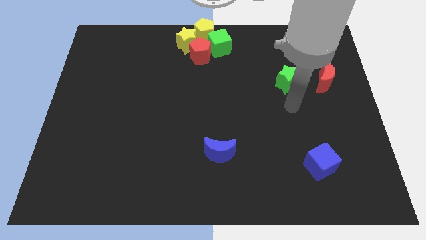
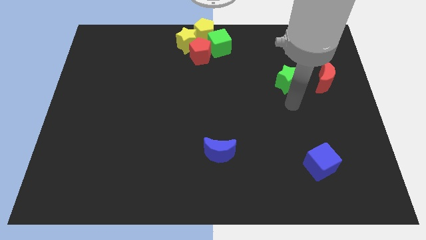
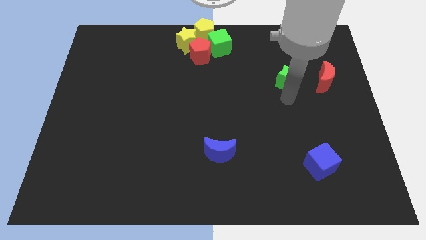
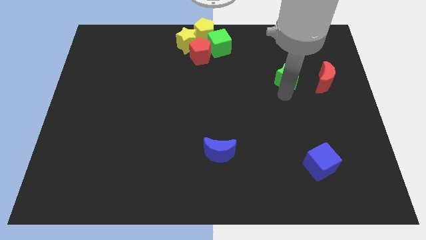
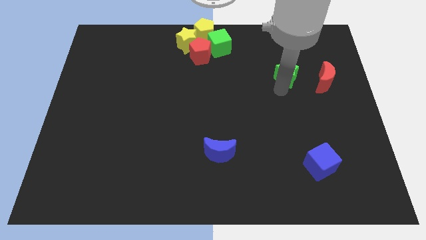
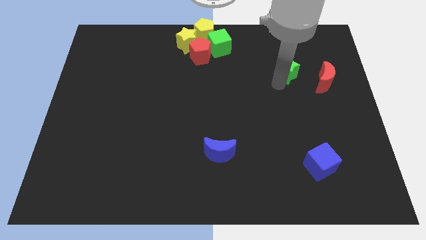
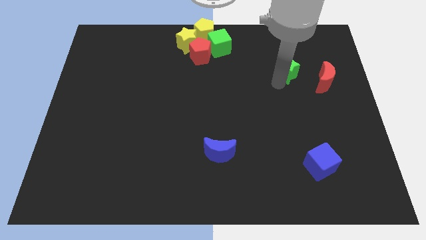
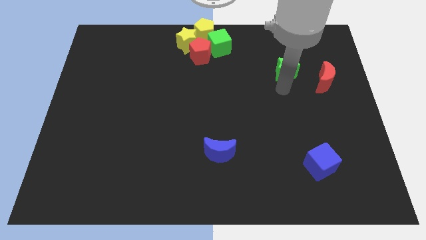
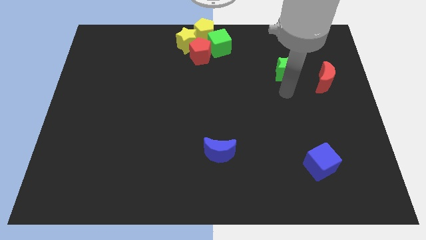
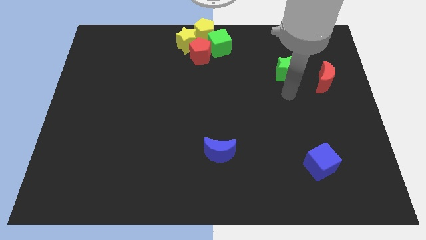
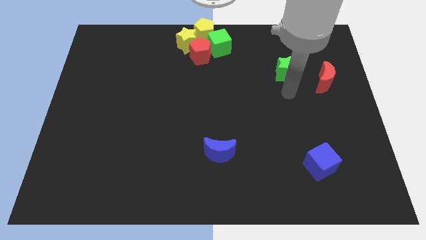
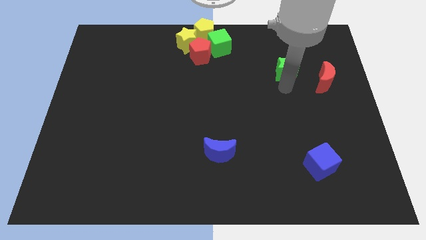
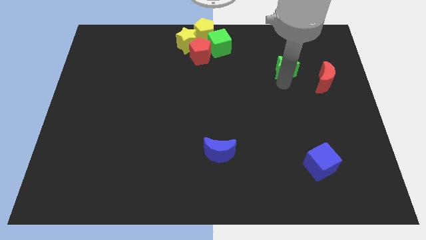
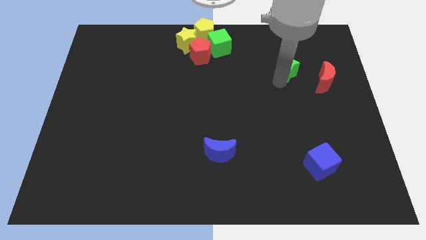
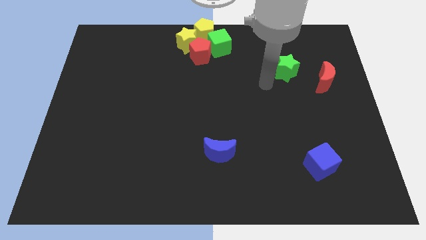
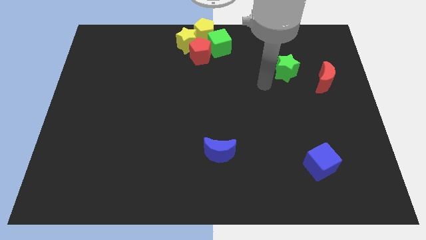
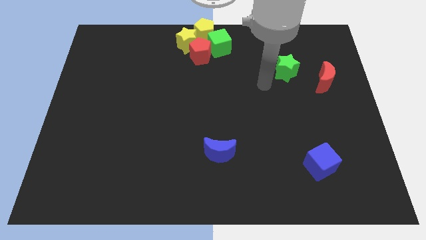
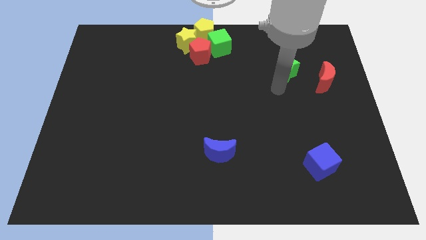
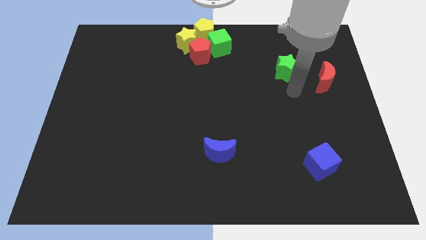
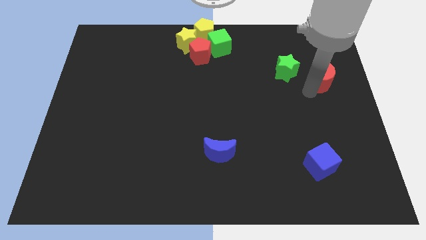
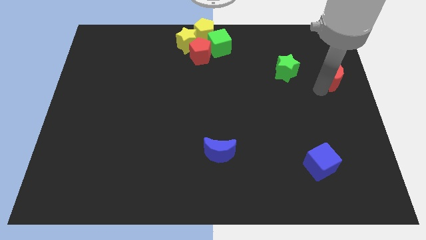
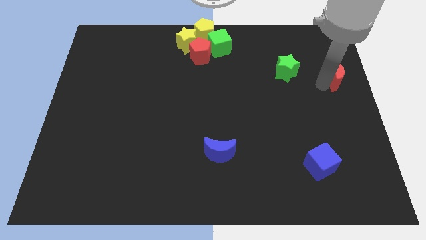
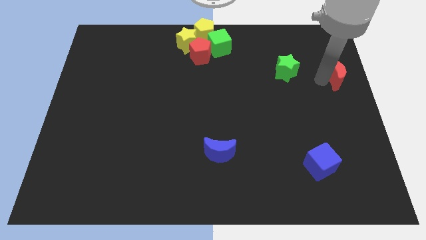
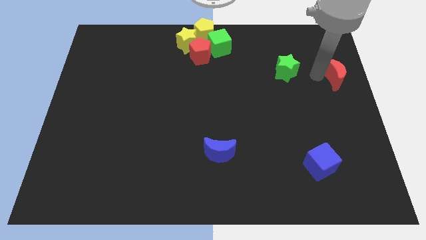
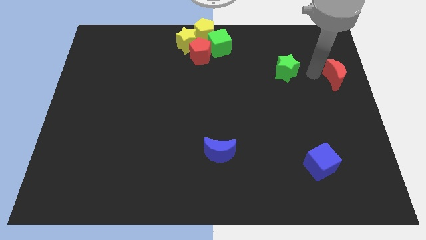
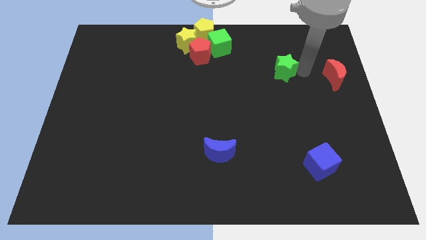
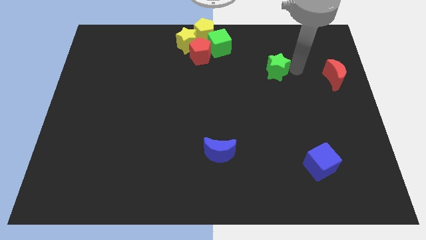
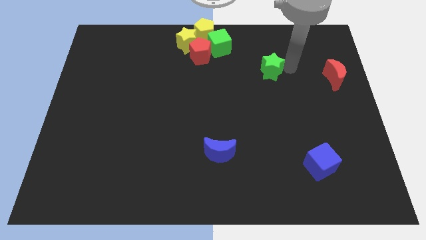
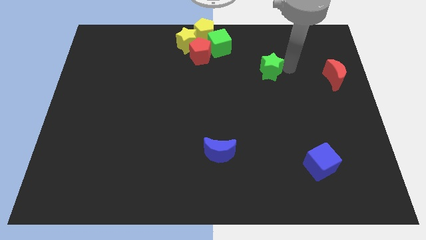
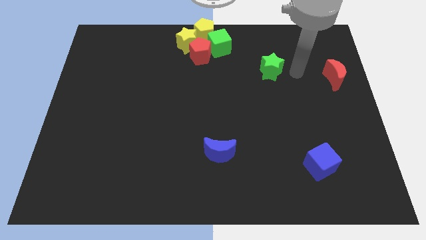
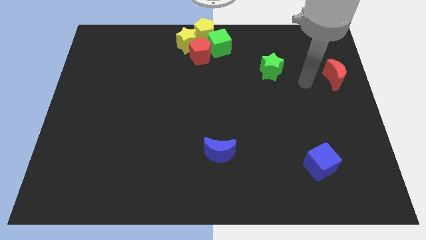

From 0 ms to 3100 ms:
place arm in between green star and red moon

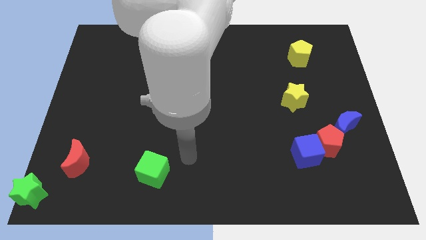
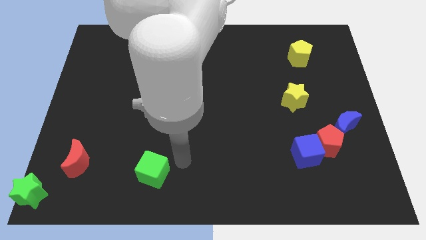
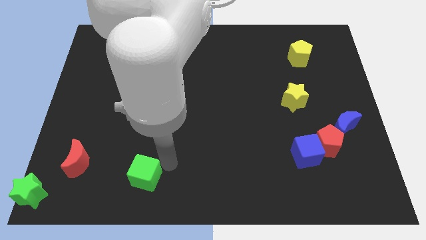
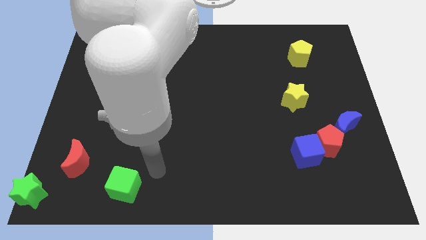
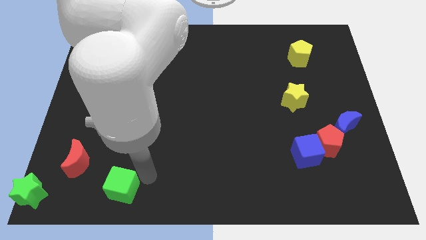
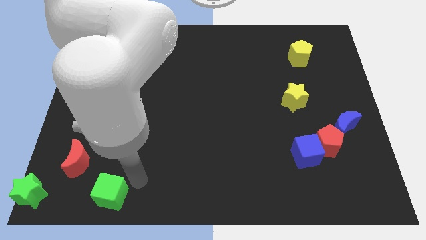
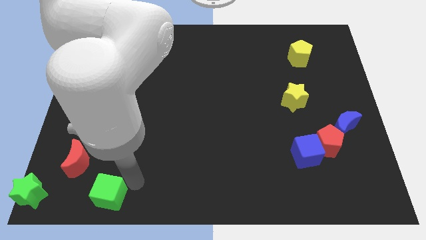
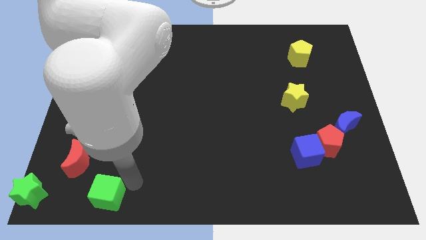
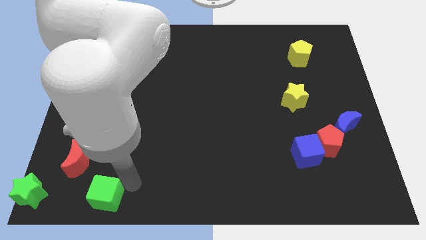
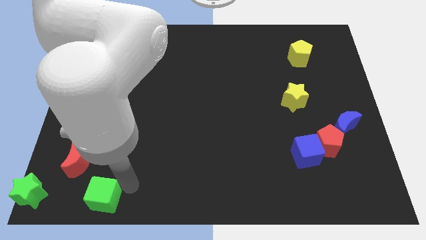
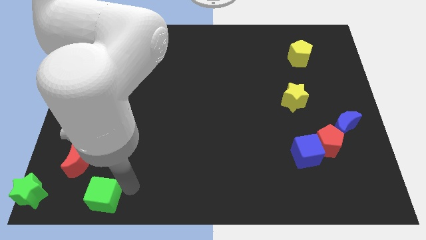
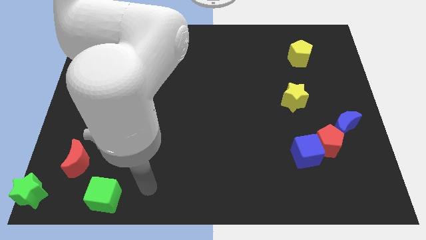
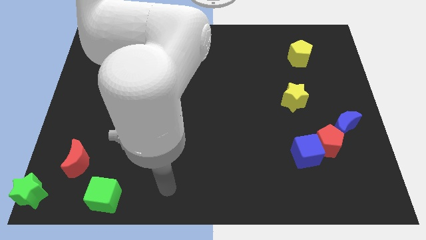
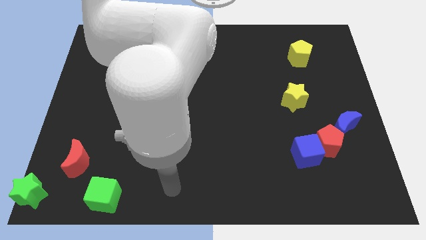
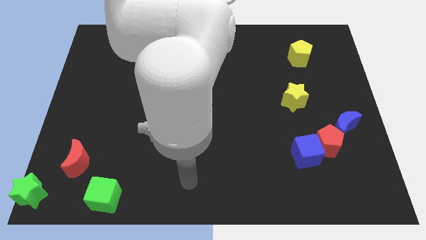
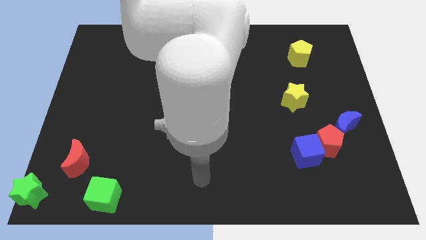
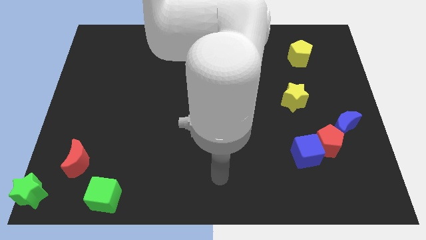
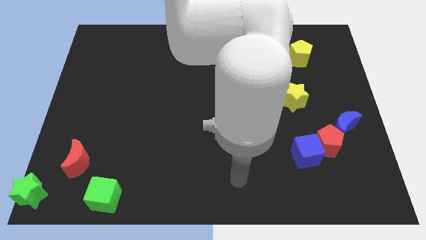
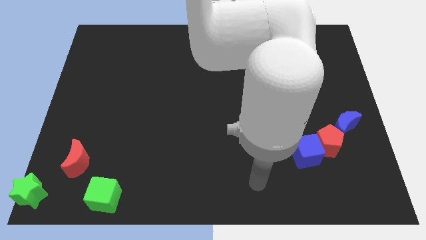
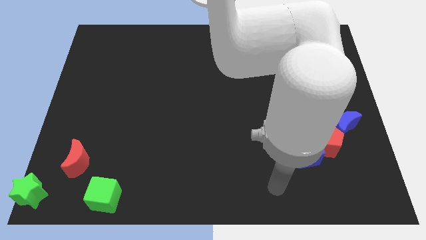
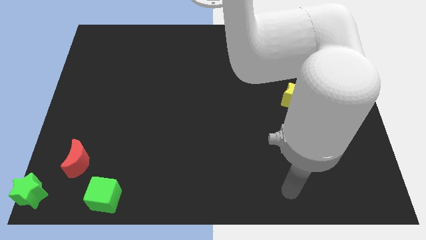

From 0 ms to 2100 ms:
push the green cube to the right of the green star

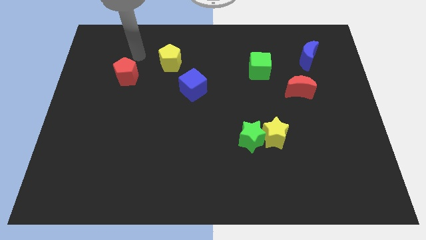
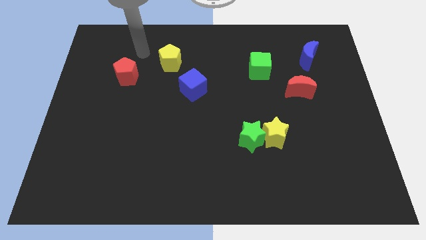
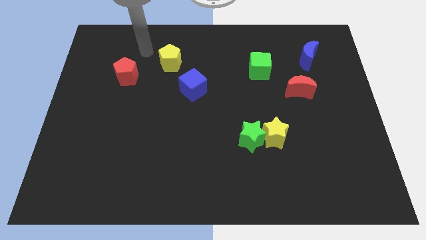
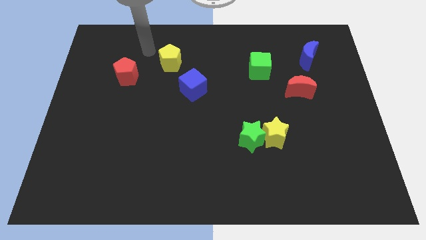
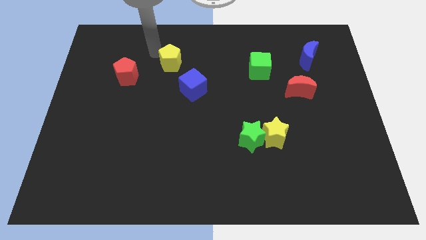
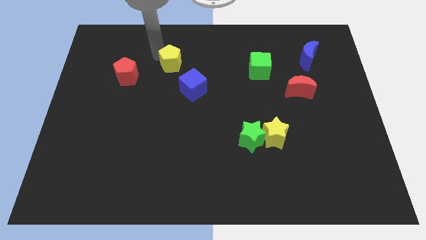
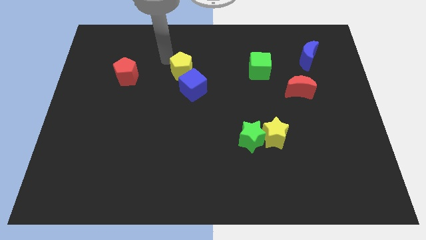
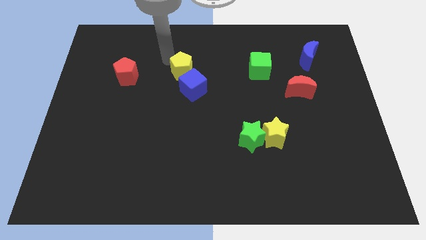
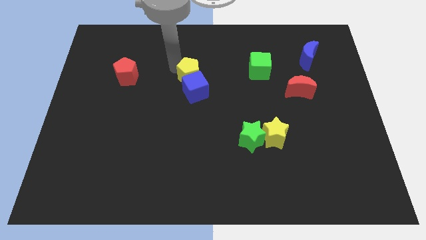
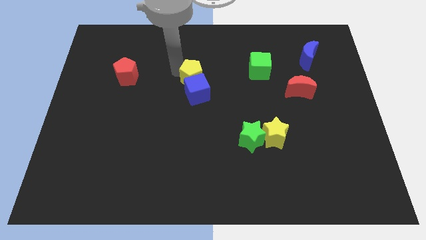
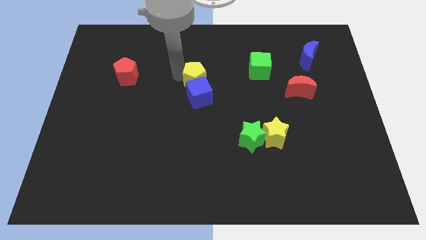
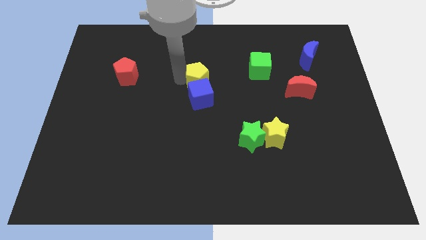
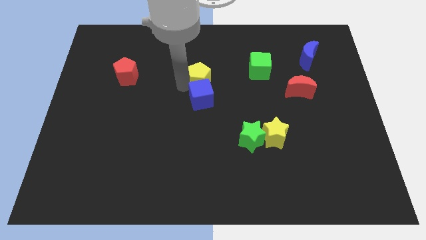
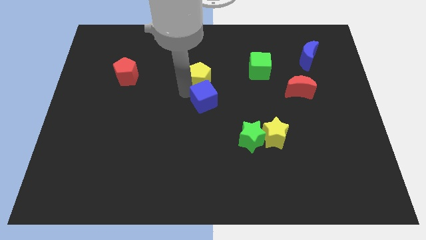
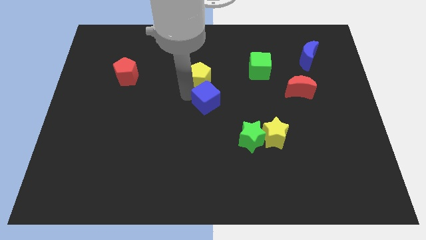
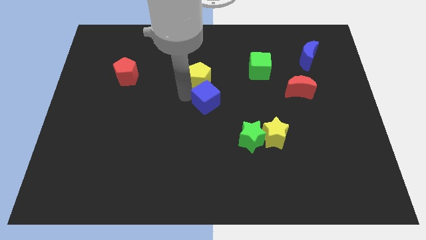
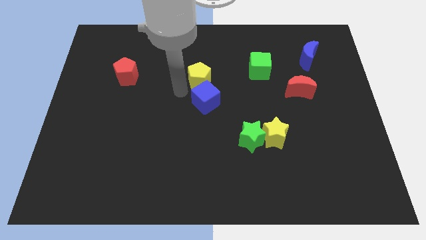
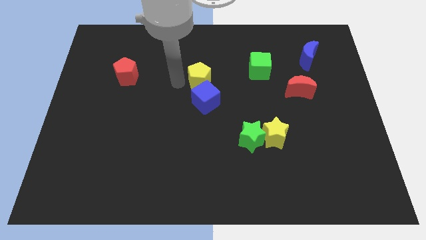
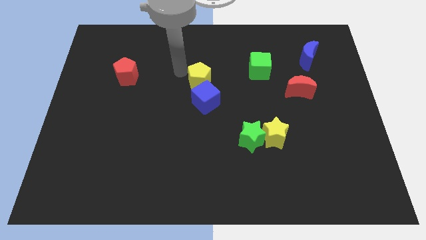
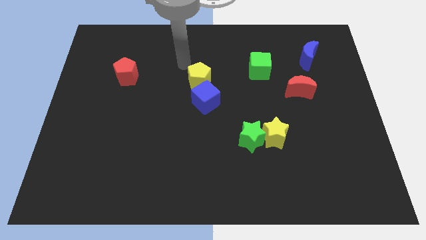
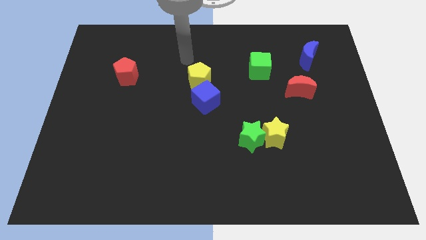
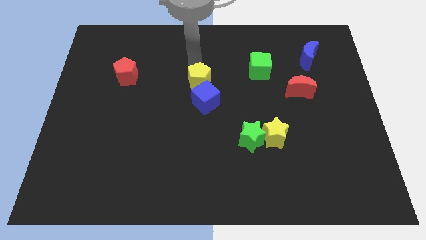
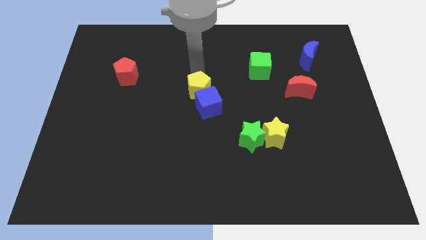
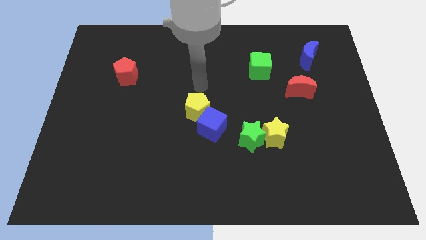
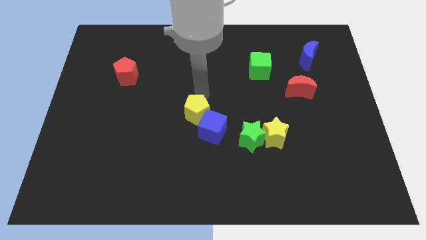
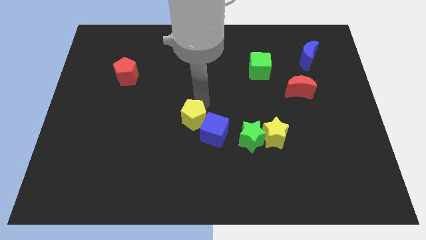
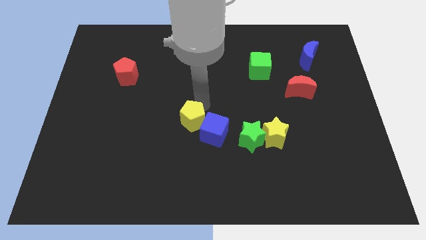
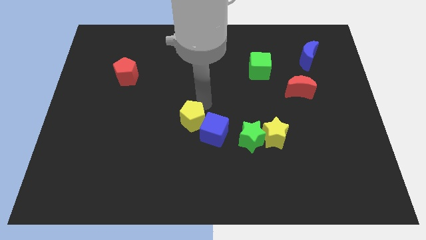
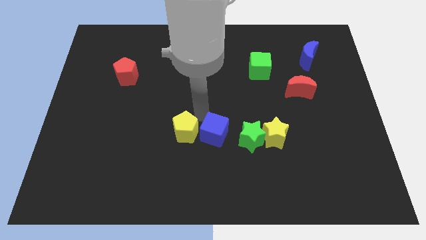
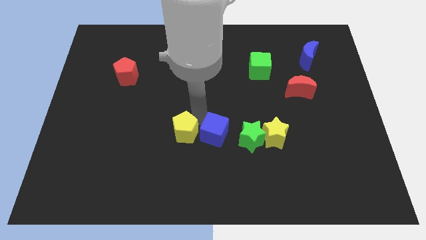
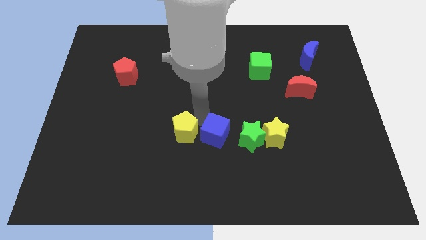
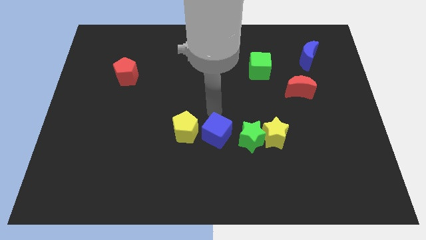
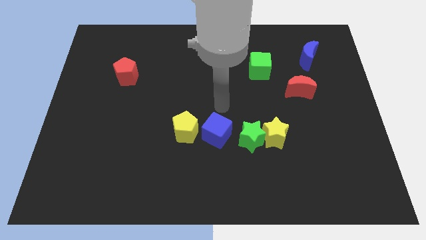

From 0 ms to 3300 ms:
place yellow pentagon on the left side of blue cube

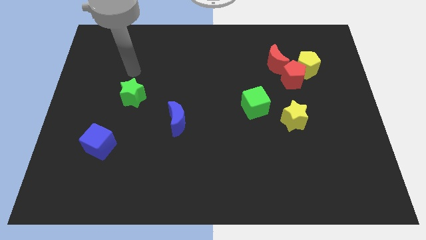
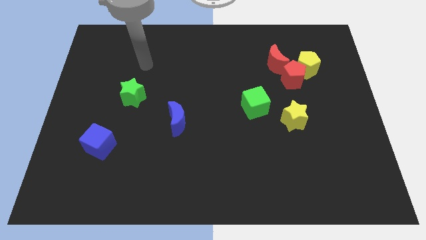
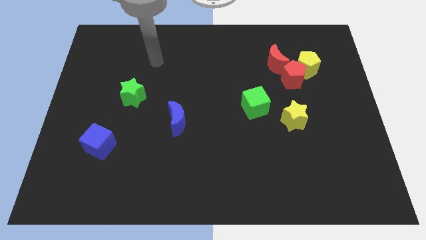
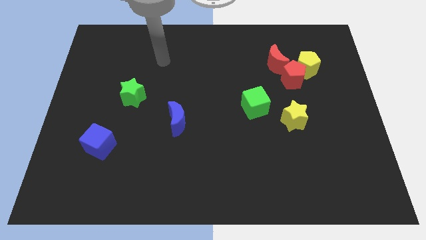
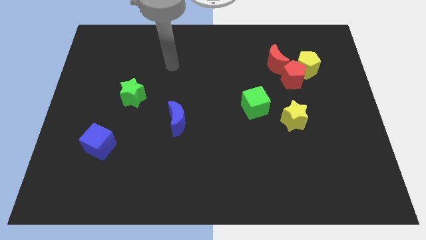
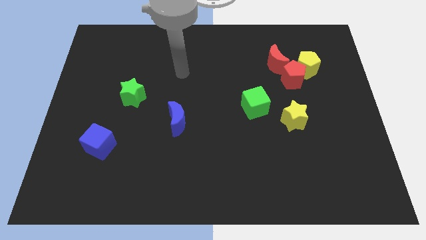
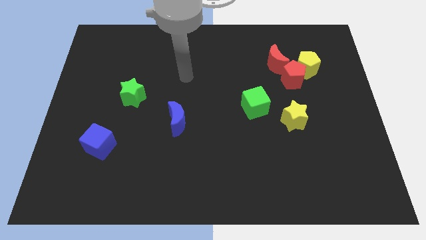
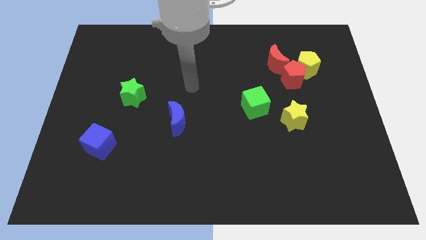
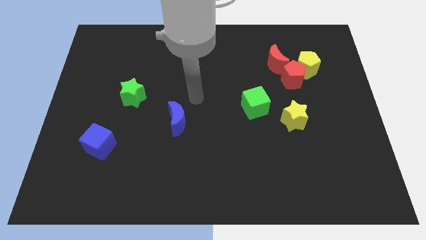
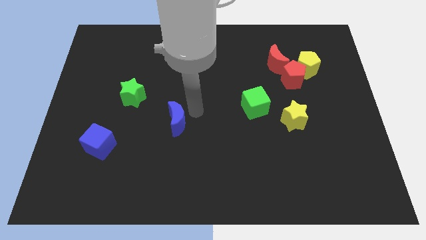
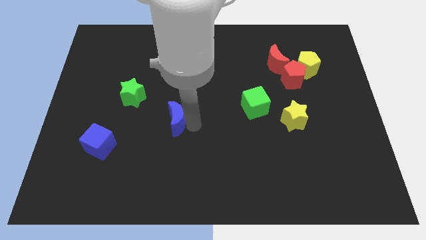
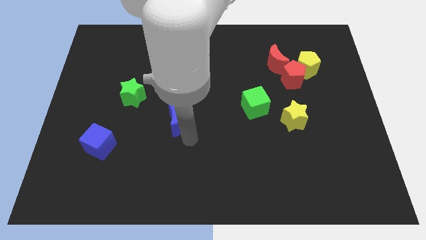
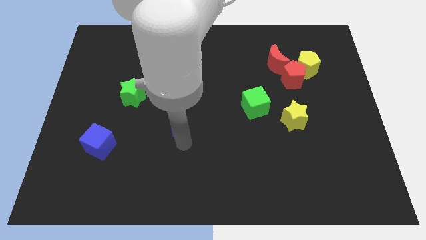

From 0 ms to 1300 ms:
move your arm to the bottom of the blue crescent
